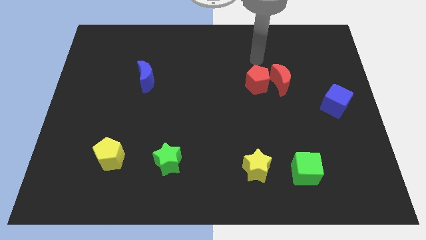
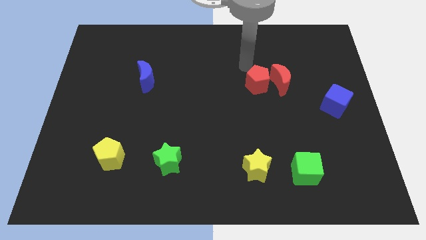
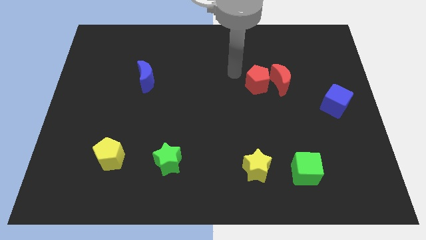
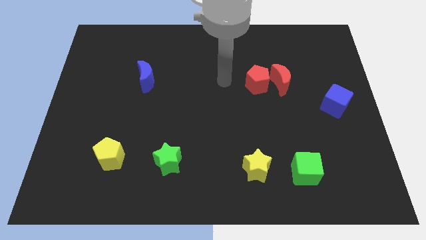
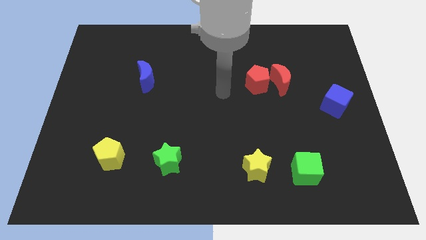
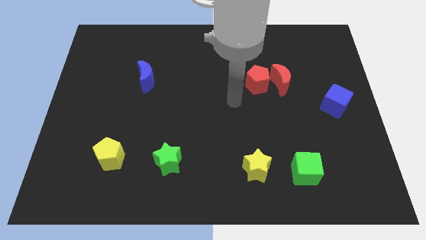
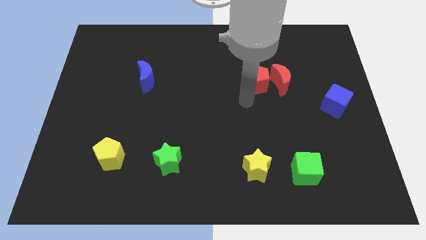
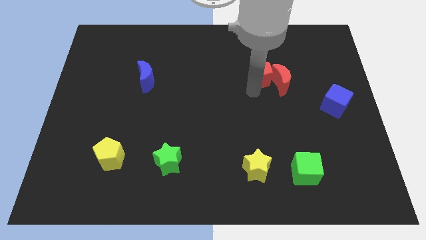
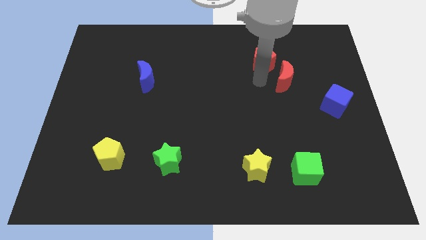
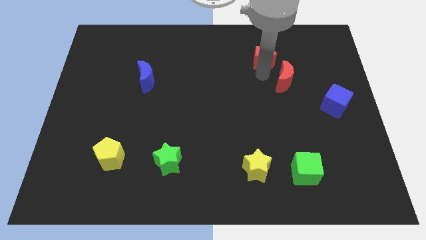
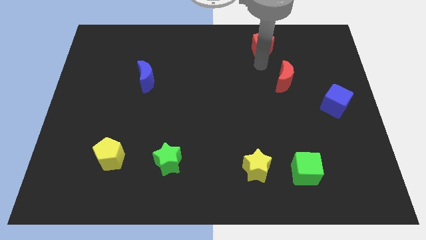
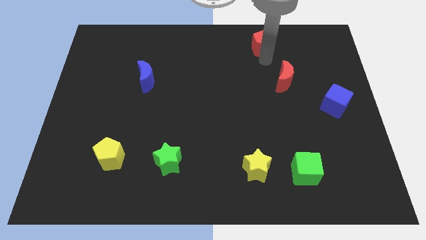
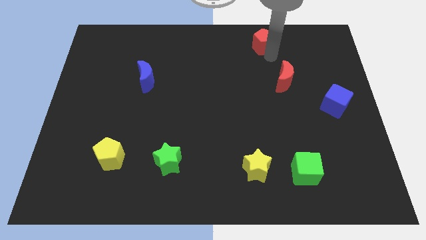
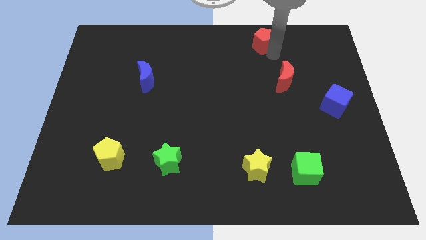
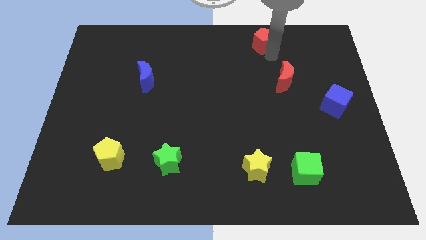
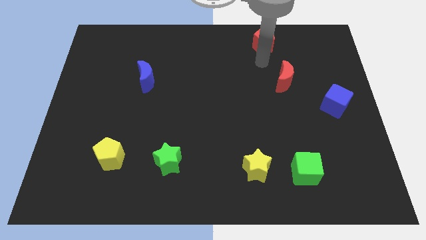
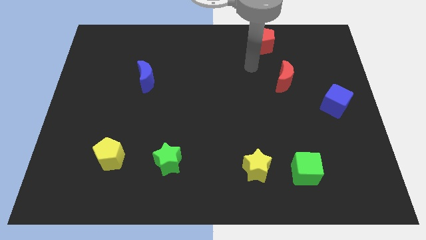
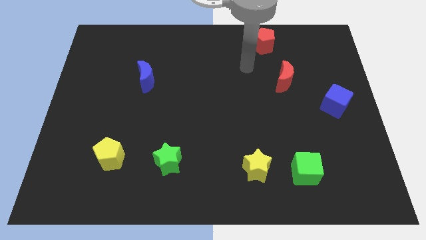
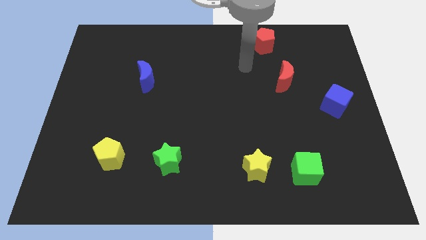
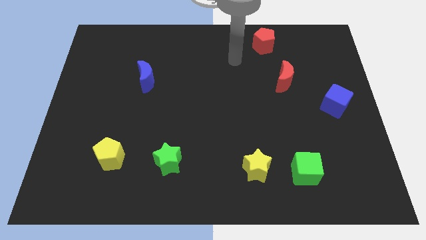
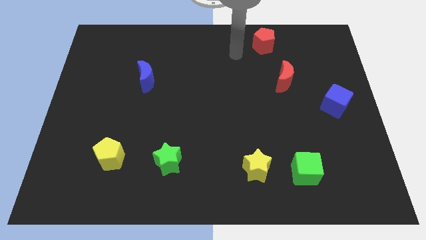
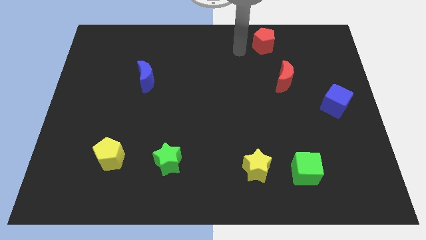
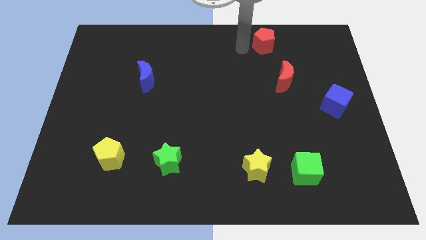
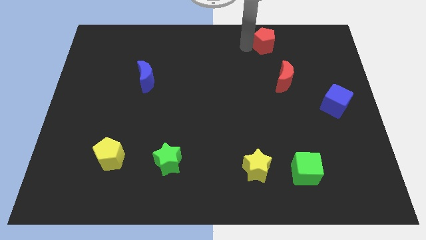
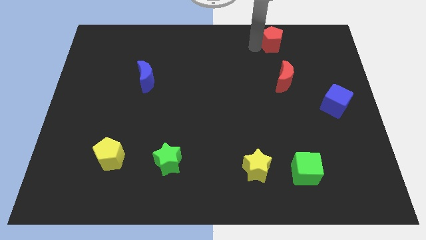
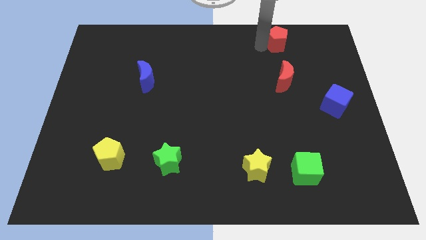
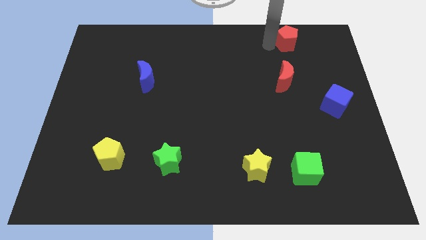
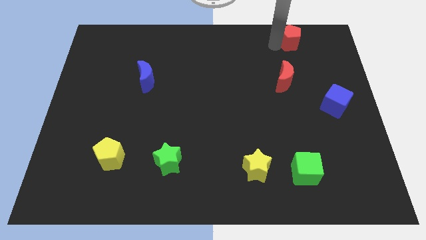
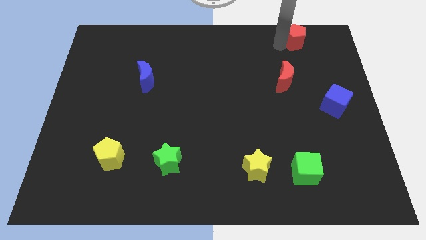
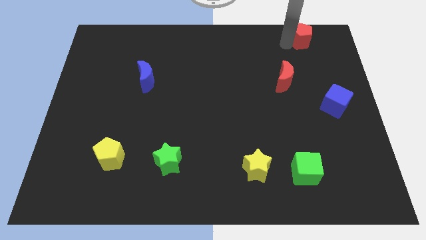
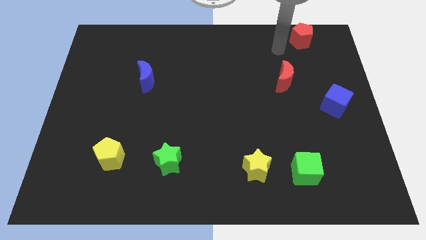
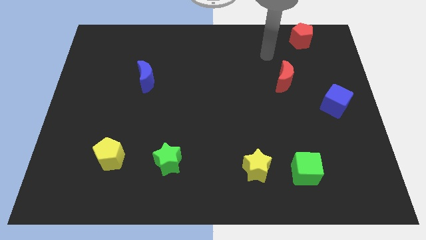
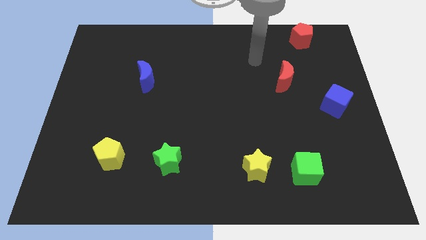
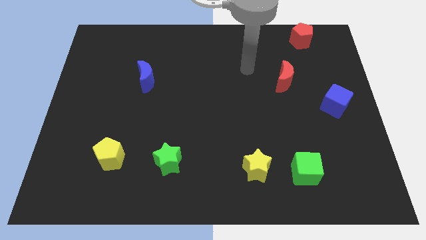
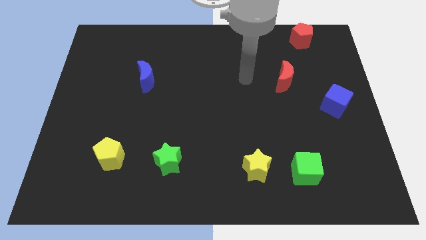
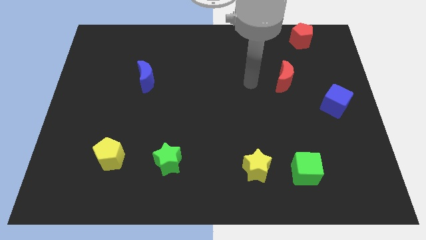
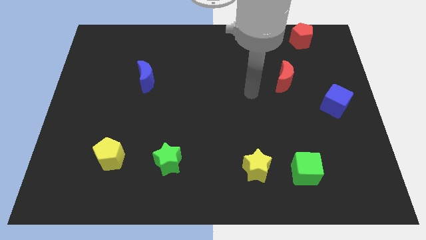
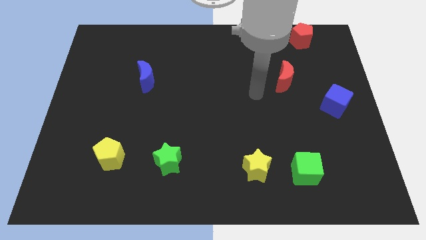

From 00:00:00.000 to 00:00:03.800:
put the red pentagon diagonally at the top right of the red crescent

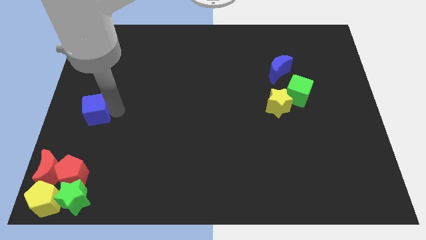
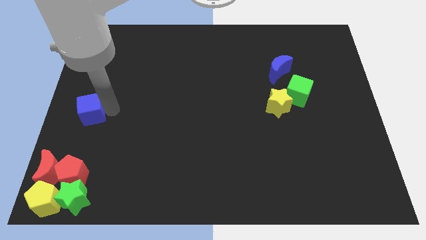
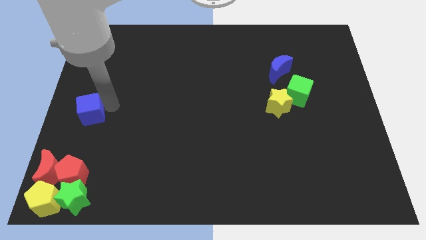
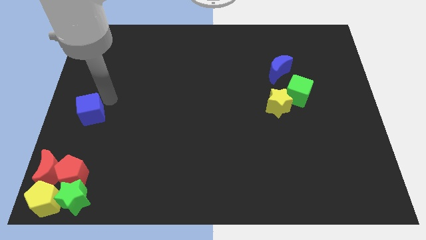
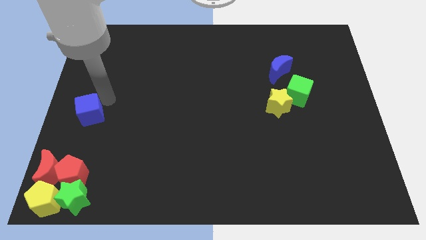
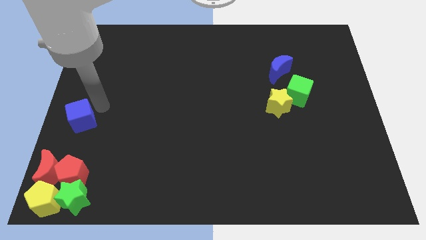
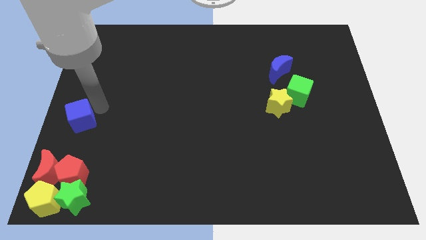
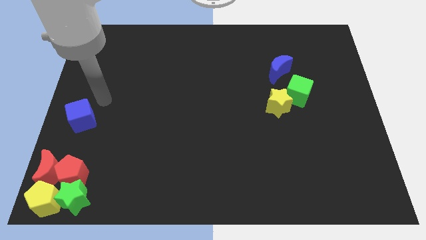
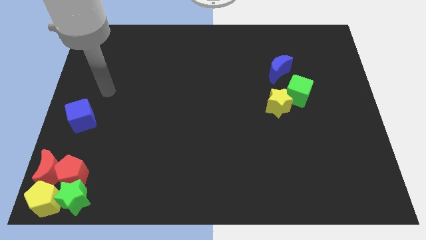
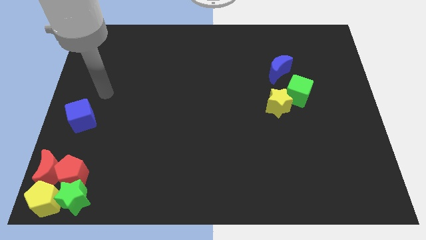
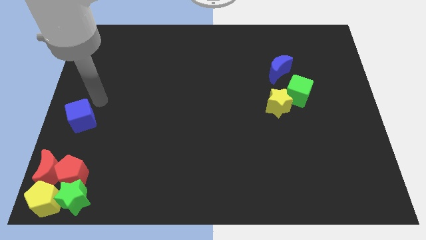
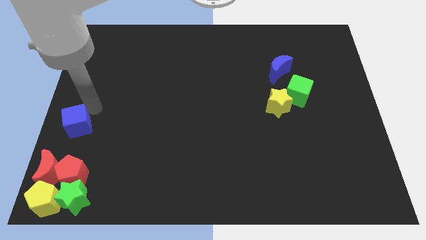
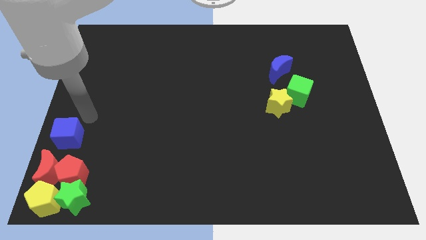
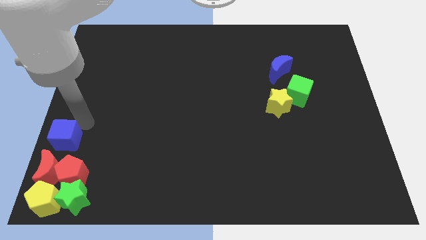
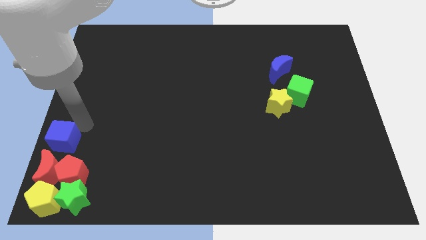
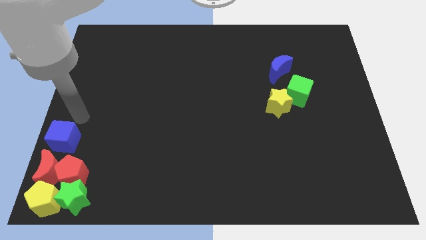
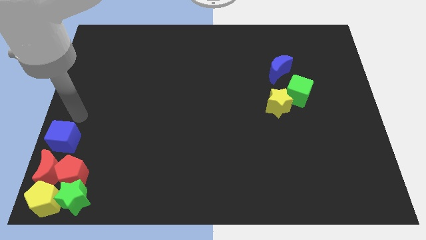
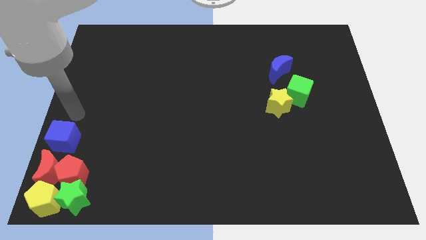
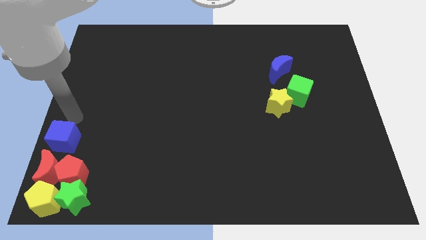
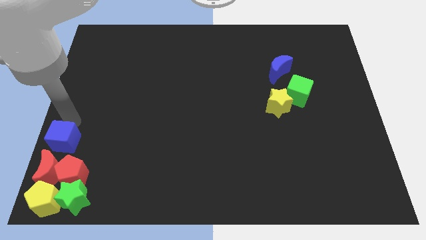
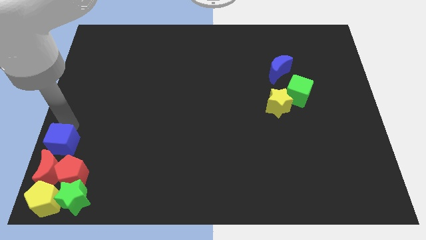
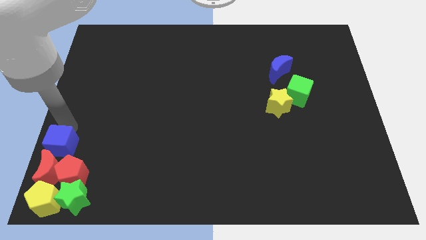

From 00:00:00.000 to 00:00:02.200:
place the blue cube above the red crescent

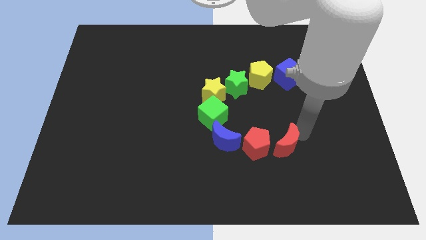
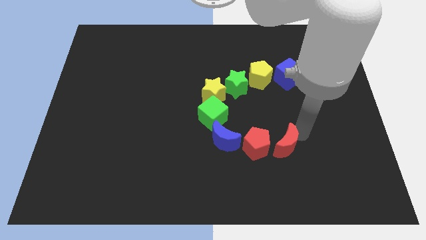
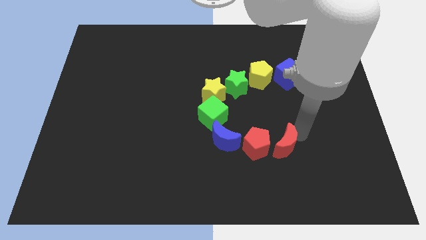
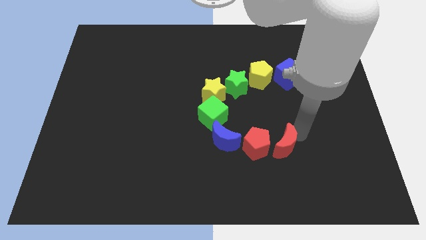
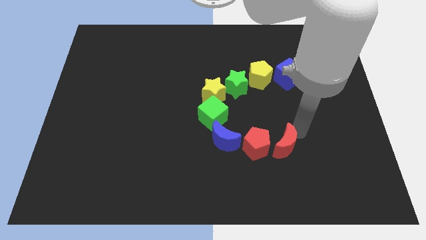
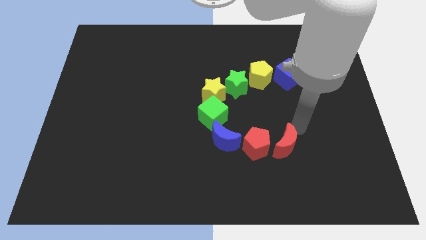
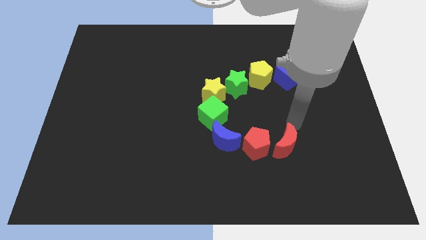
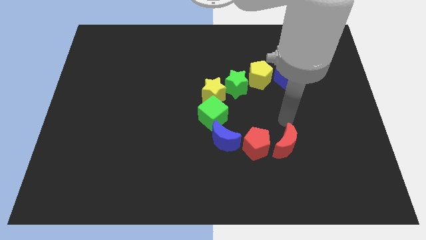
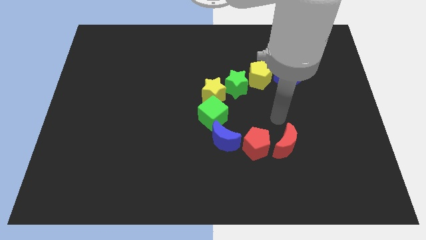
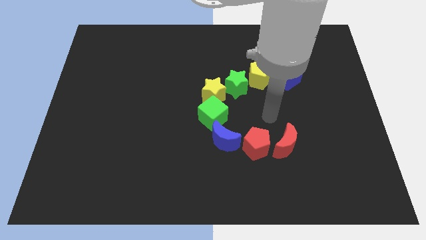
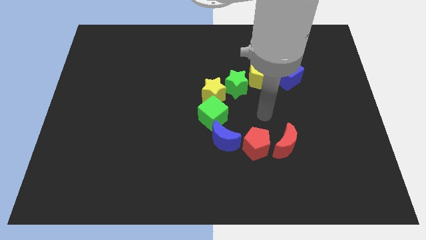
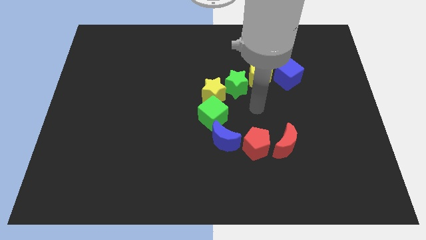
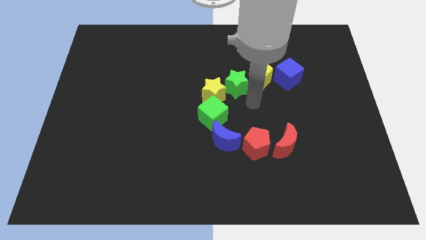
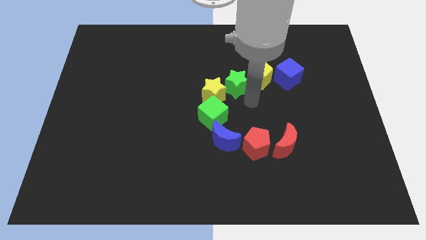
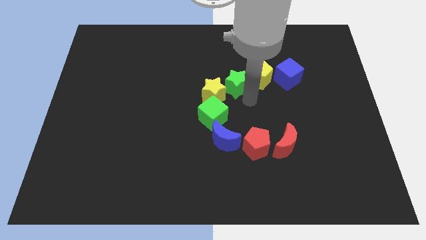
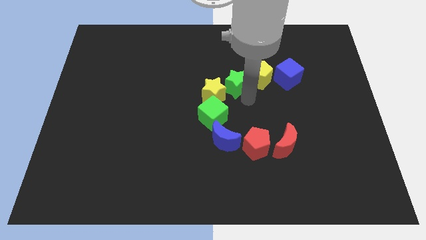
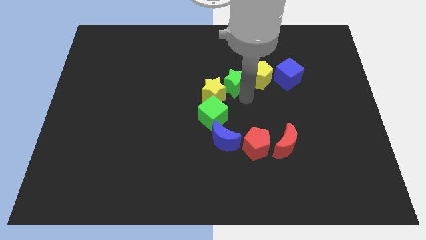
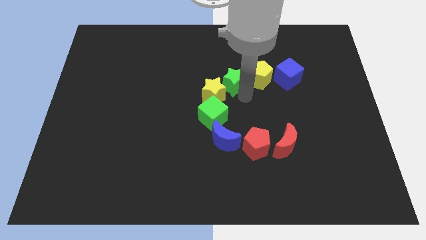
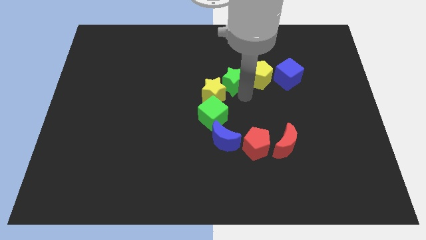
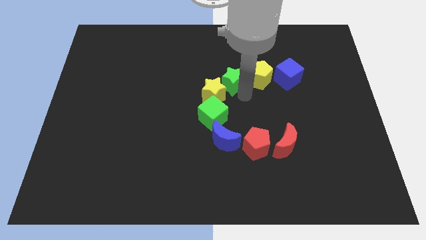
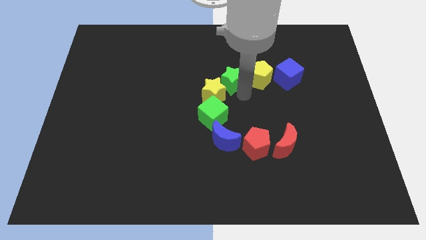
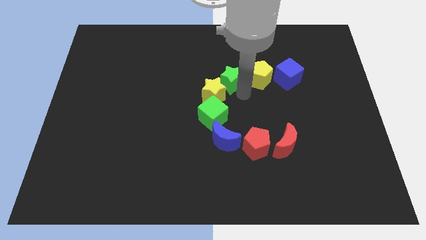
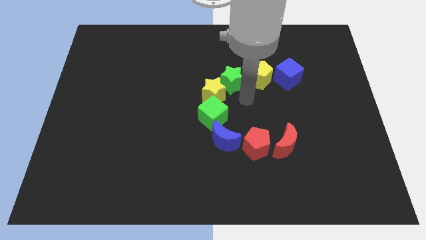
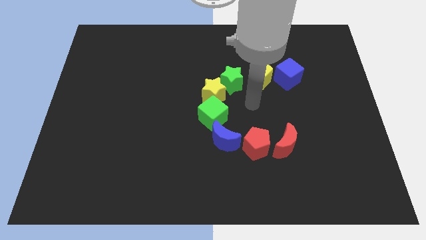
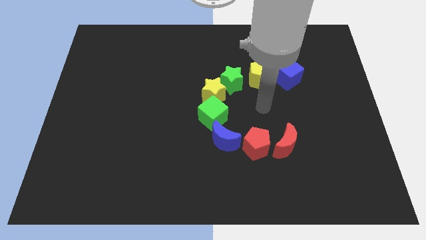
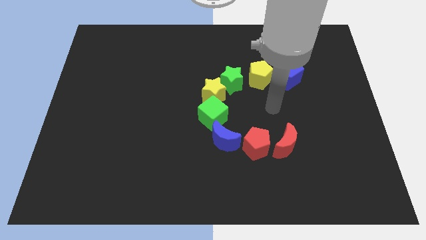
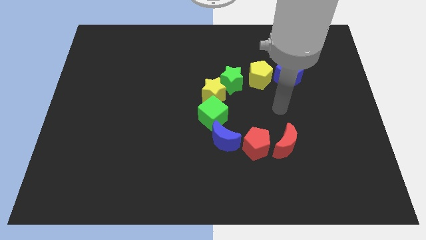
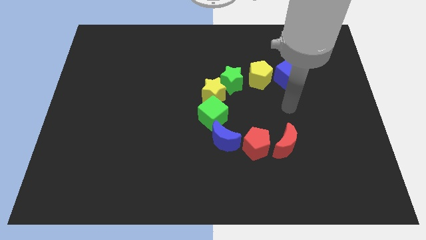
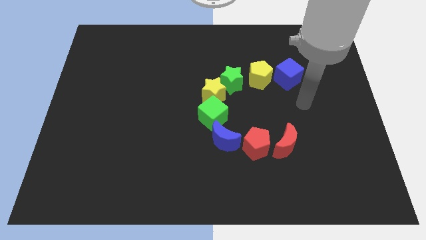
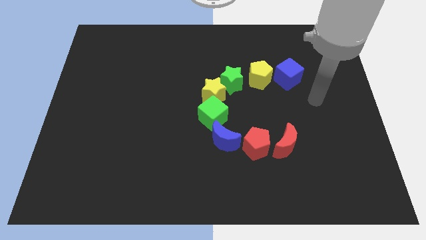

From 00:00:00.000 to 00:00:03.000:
move the green star at the top right of the yellow star
